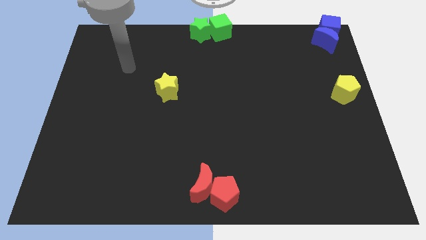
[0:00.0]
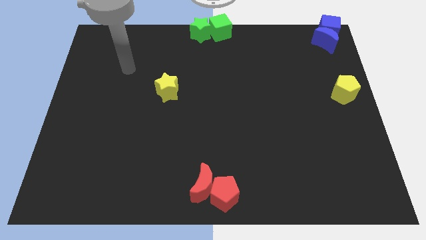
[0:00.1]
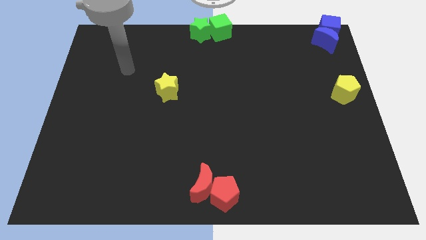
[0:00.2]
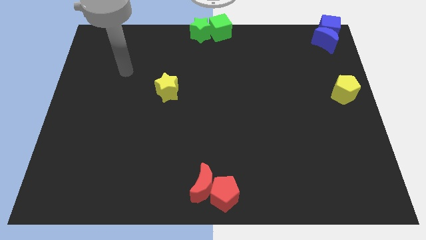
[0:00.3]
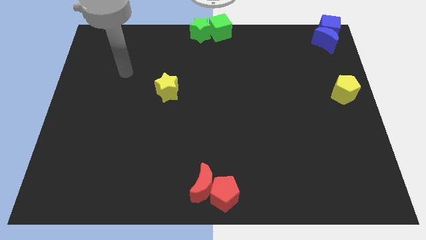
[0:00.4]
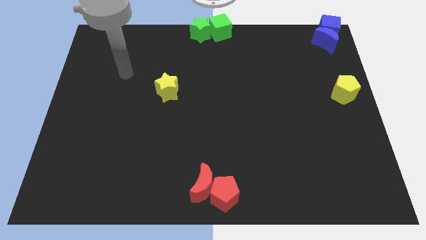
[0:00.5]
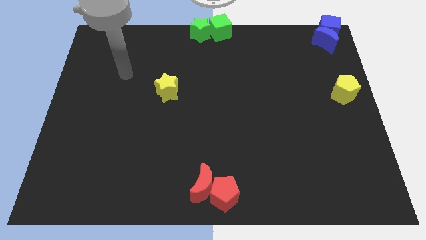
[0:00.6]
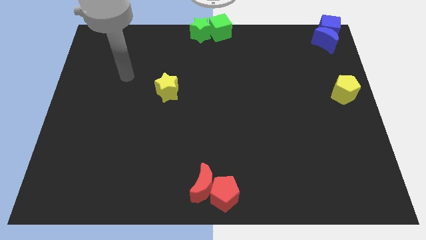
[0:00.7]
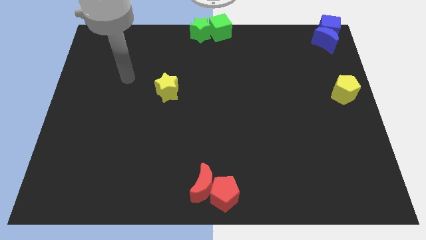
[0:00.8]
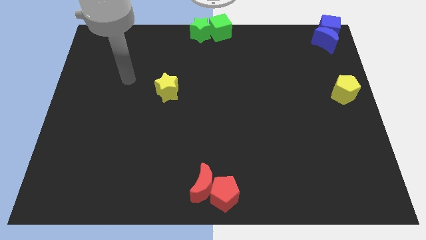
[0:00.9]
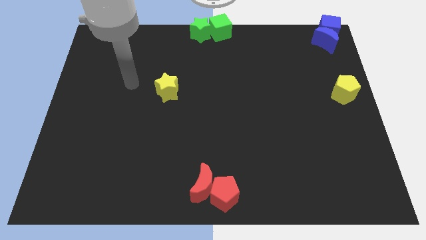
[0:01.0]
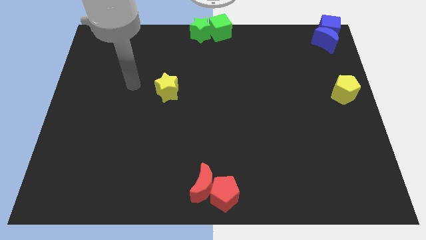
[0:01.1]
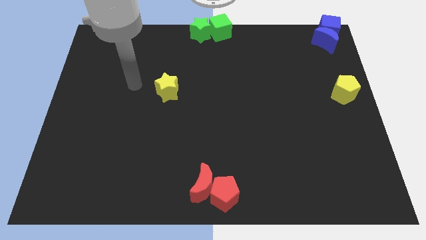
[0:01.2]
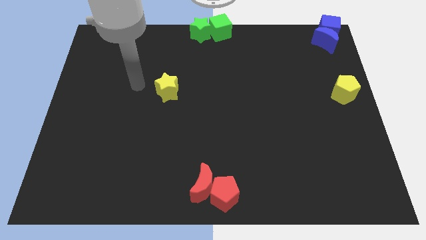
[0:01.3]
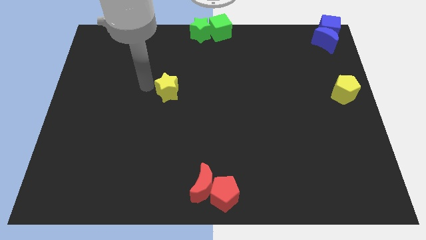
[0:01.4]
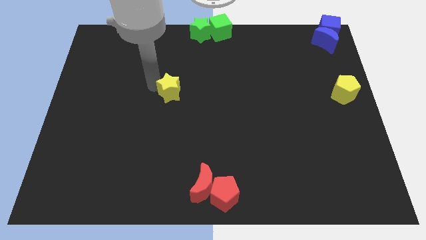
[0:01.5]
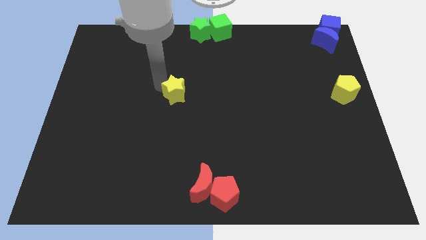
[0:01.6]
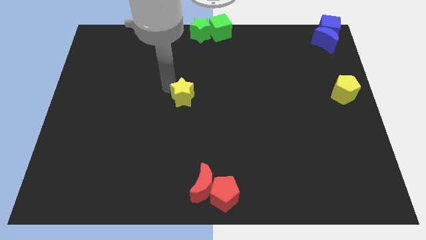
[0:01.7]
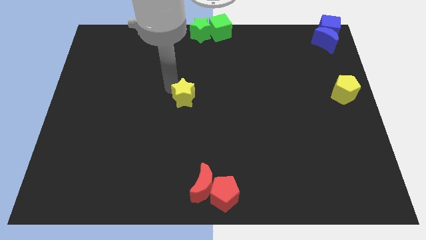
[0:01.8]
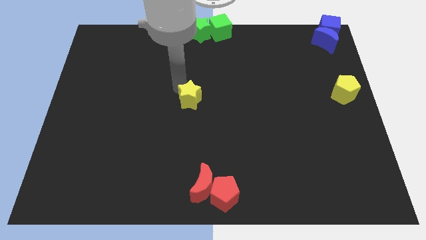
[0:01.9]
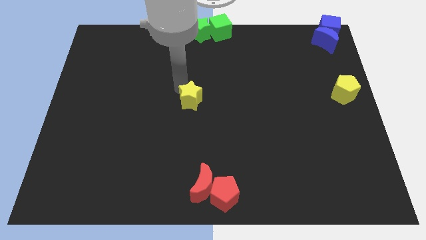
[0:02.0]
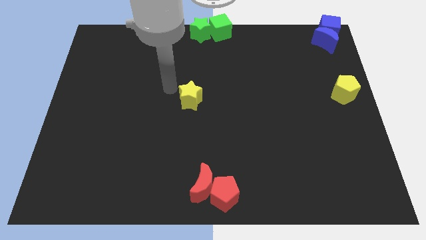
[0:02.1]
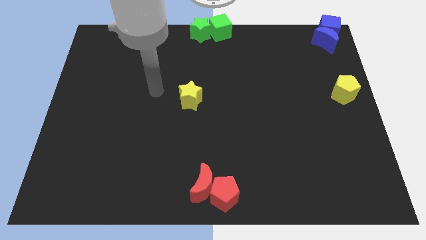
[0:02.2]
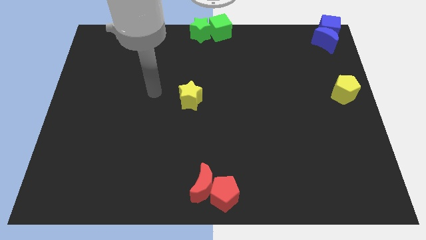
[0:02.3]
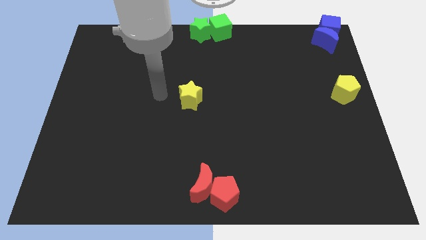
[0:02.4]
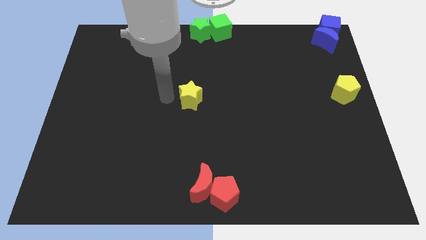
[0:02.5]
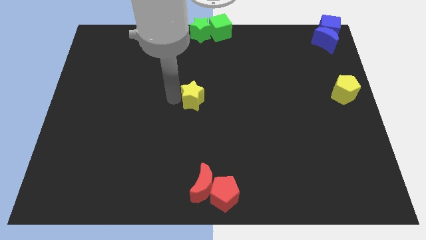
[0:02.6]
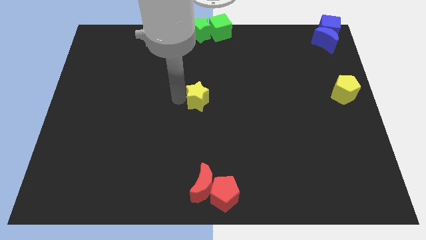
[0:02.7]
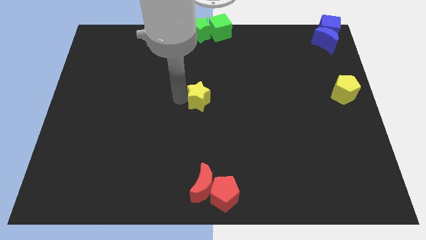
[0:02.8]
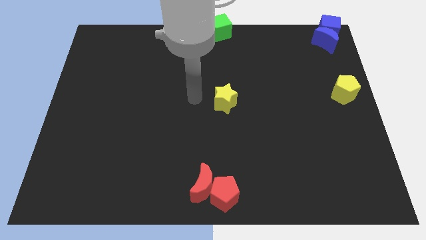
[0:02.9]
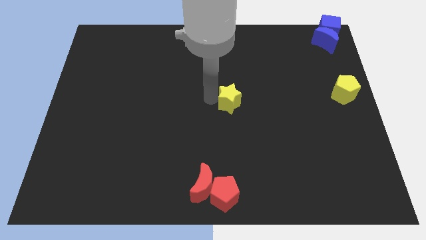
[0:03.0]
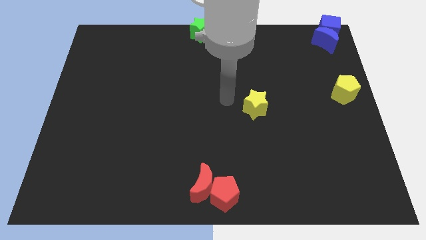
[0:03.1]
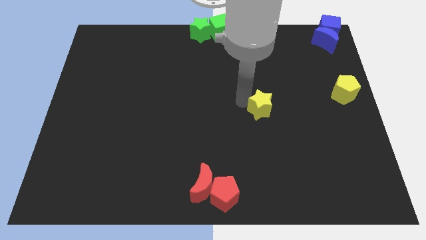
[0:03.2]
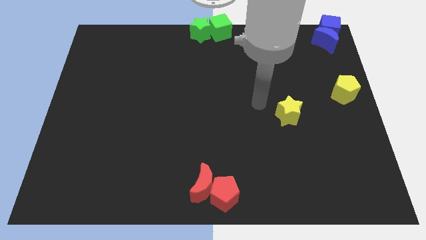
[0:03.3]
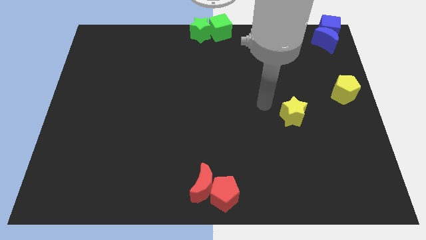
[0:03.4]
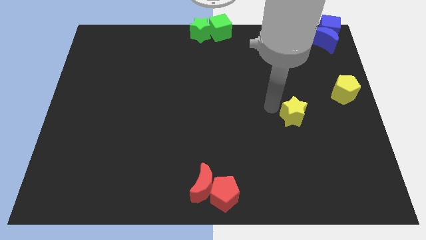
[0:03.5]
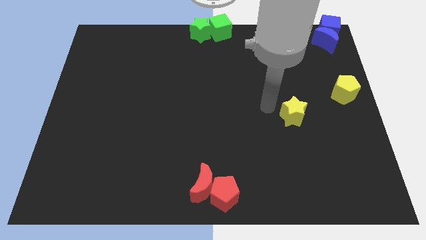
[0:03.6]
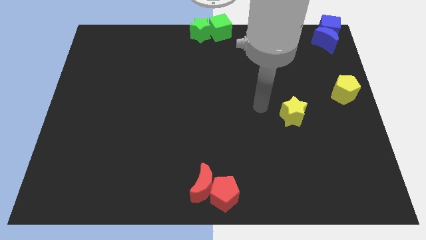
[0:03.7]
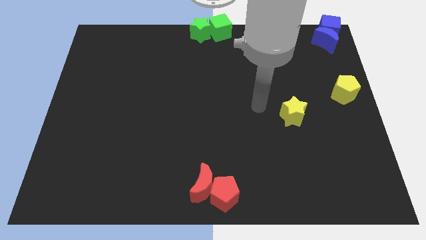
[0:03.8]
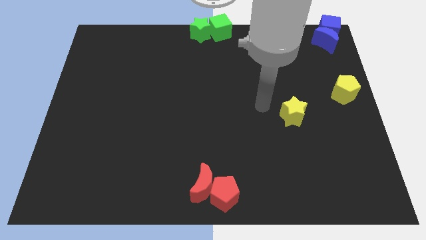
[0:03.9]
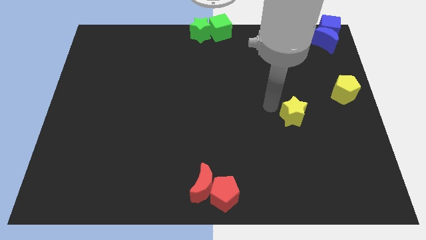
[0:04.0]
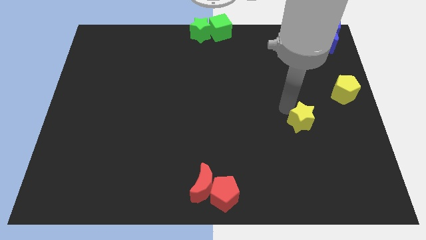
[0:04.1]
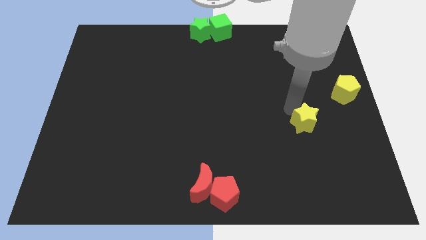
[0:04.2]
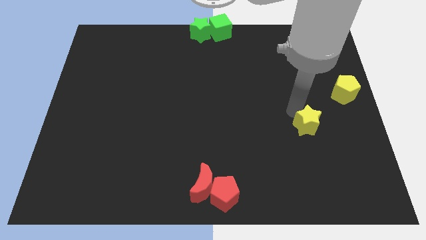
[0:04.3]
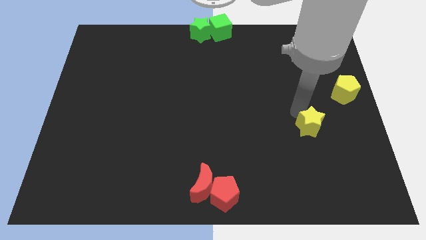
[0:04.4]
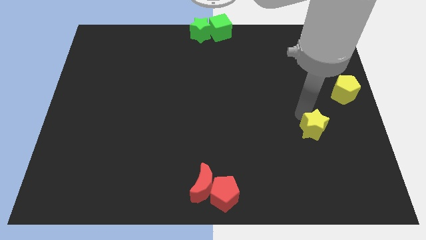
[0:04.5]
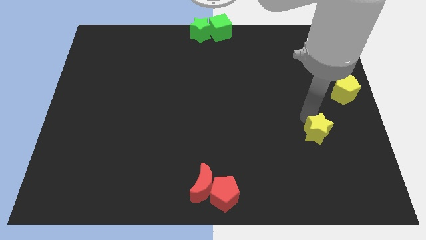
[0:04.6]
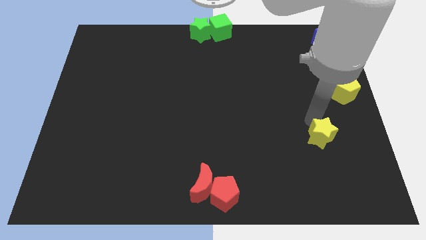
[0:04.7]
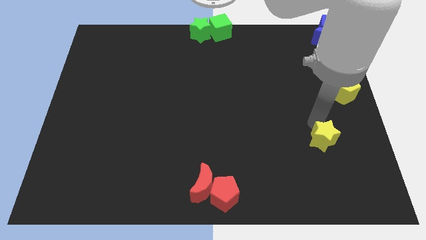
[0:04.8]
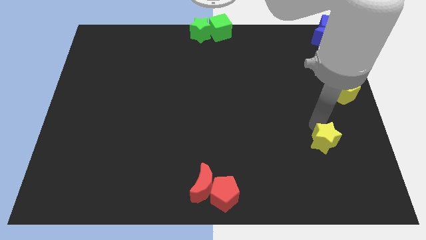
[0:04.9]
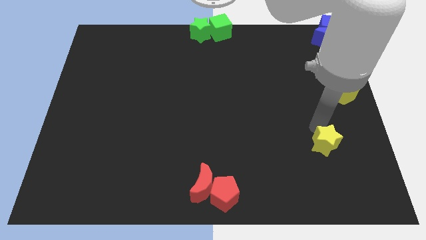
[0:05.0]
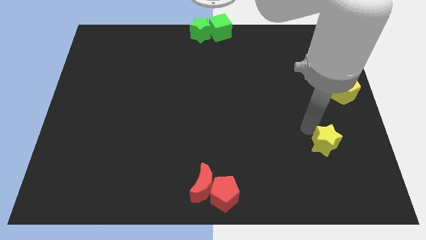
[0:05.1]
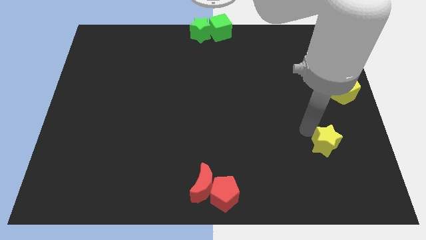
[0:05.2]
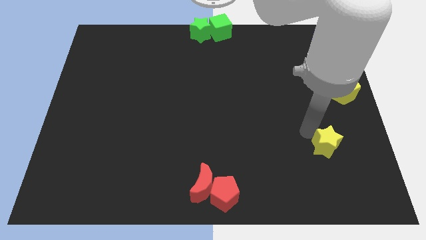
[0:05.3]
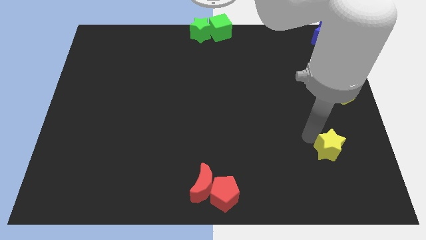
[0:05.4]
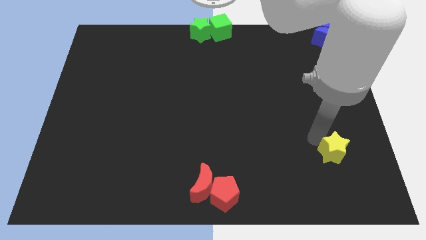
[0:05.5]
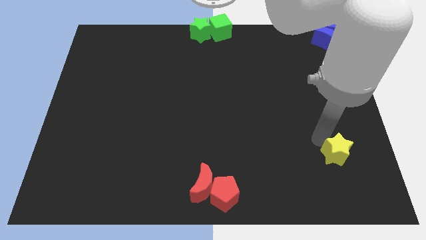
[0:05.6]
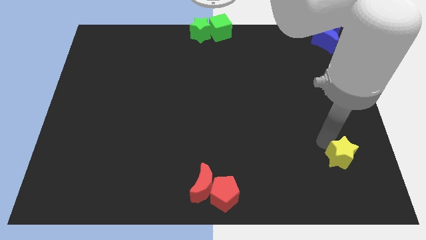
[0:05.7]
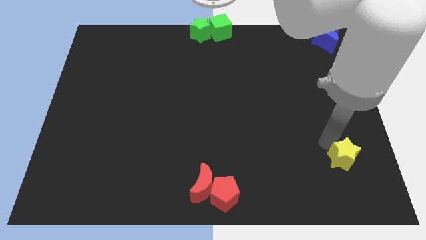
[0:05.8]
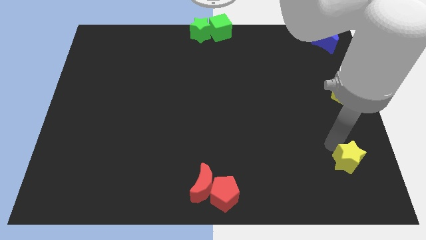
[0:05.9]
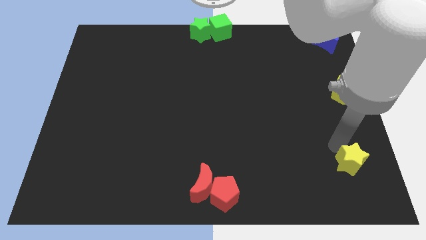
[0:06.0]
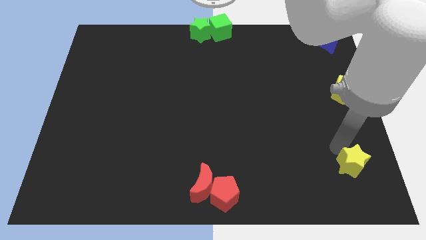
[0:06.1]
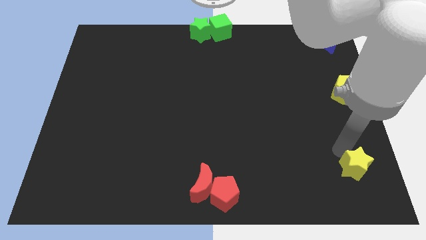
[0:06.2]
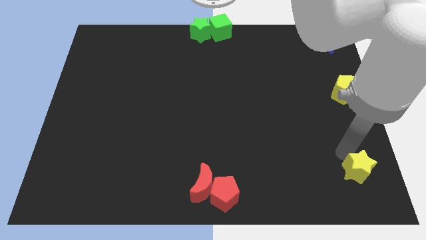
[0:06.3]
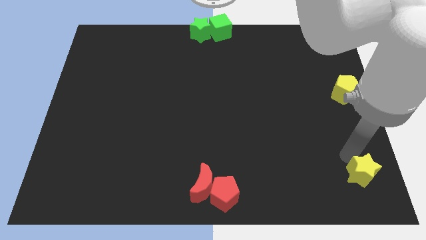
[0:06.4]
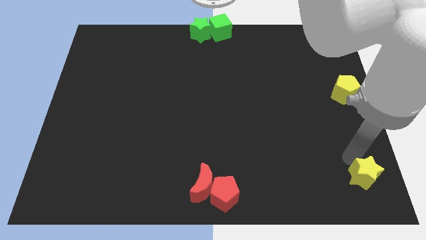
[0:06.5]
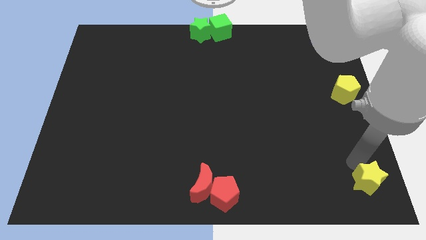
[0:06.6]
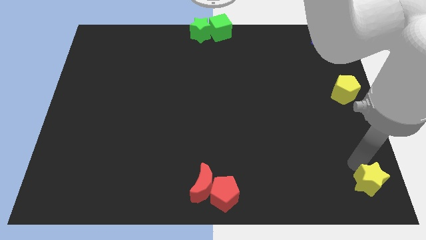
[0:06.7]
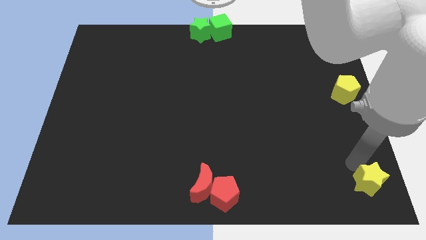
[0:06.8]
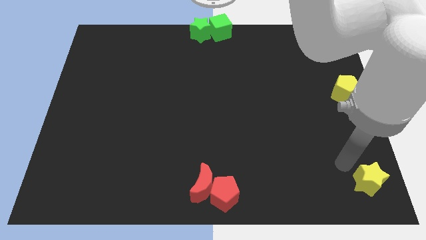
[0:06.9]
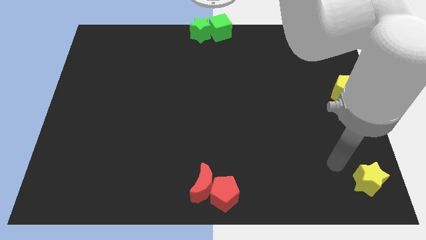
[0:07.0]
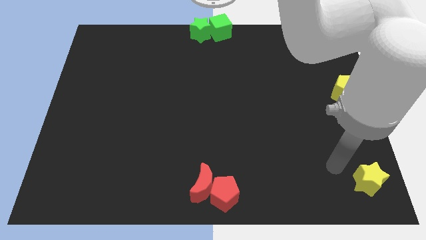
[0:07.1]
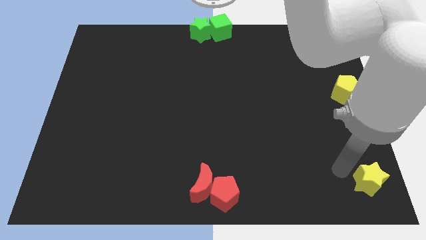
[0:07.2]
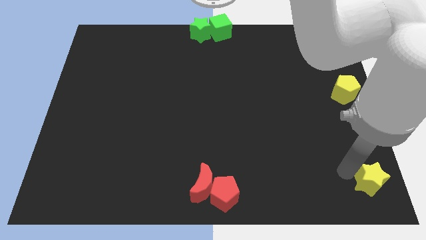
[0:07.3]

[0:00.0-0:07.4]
push the yellow star towards the bottom right corner of the board

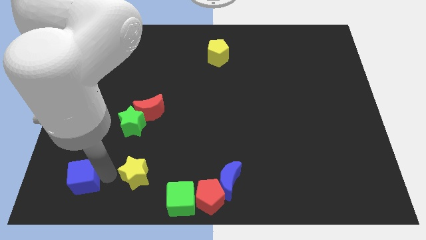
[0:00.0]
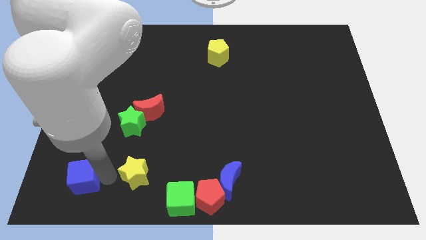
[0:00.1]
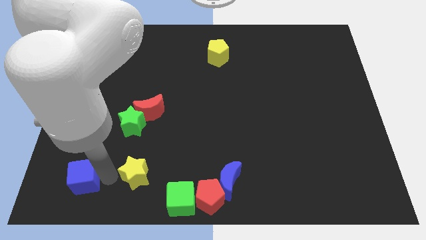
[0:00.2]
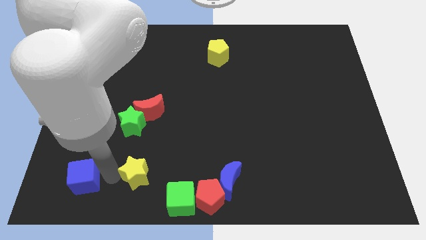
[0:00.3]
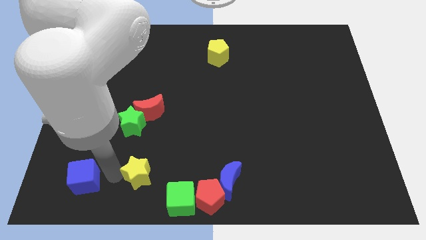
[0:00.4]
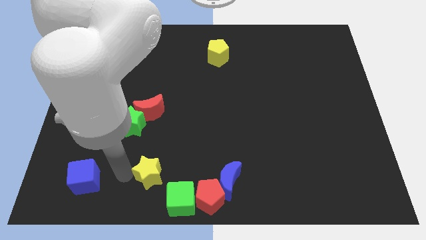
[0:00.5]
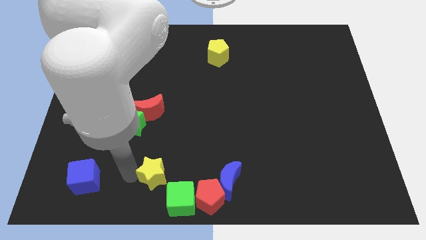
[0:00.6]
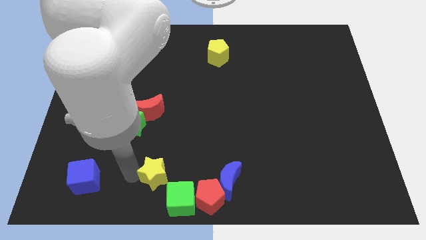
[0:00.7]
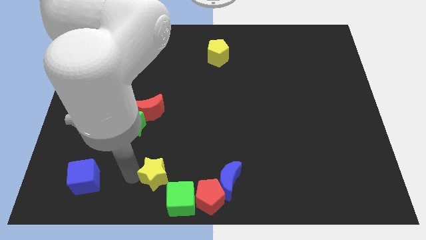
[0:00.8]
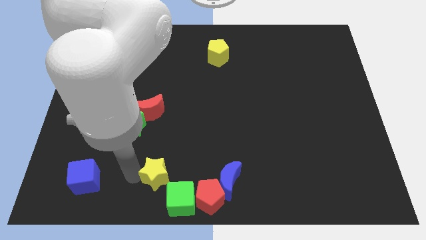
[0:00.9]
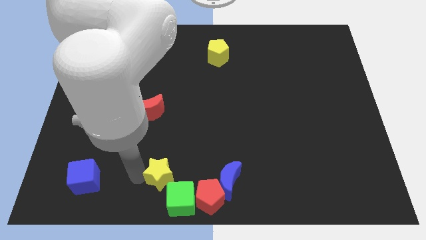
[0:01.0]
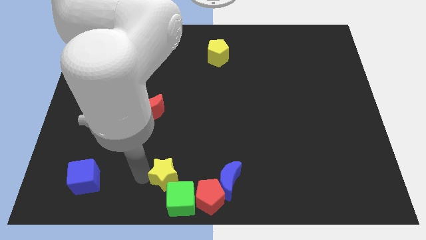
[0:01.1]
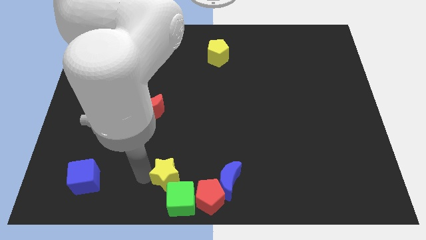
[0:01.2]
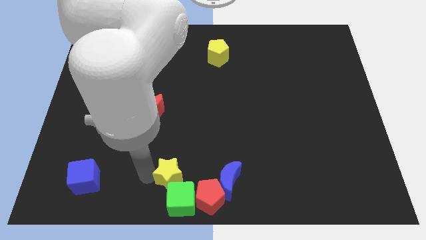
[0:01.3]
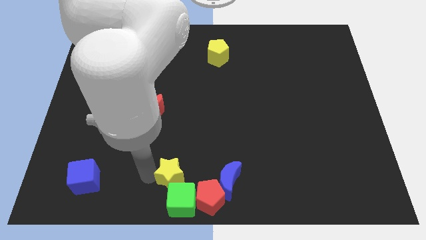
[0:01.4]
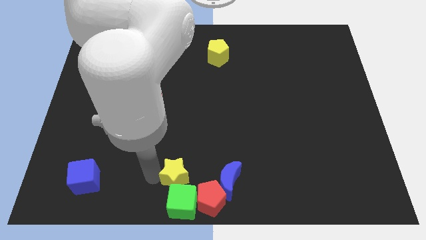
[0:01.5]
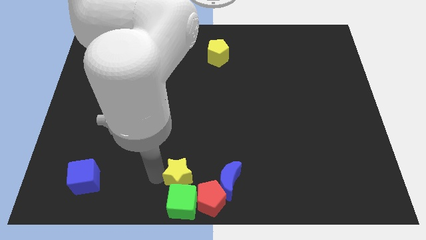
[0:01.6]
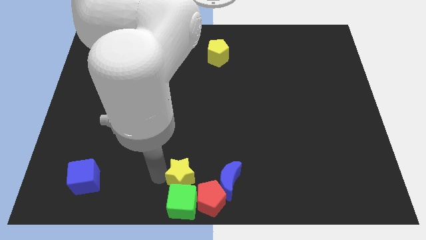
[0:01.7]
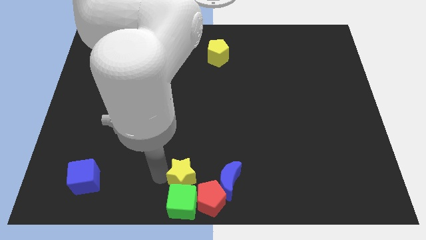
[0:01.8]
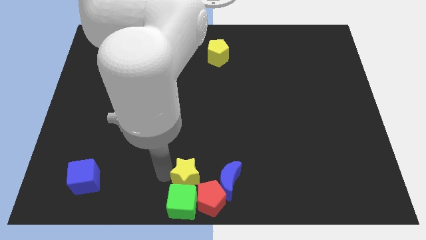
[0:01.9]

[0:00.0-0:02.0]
place the yellow star above the green cube
